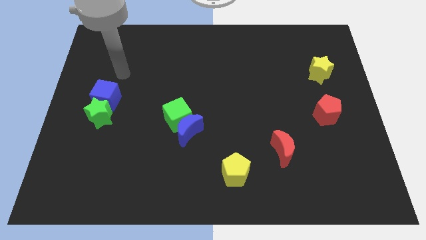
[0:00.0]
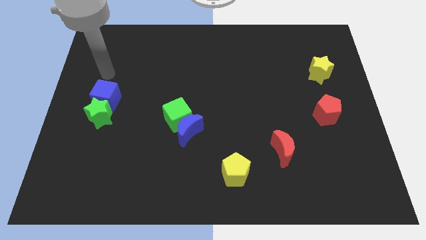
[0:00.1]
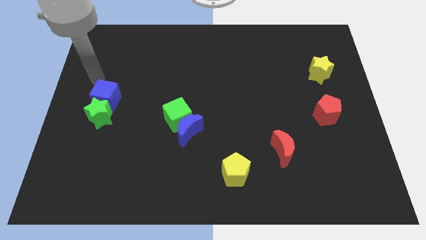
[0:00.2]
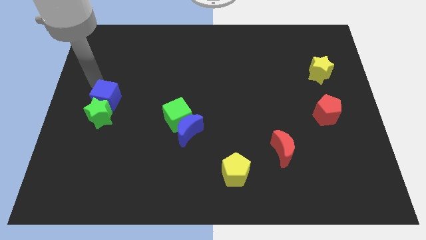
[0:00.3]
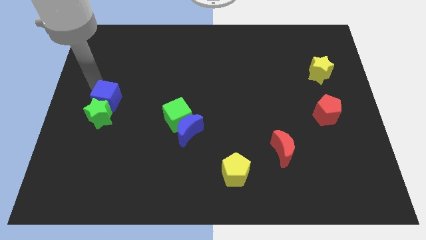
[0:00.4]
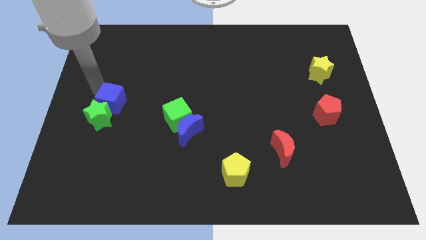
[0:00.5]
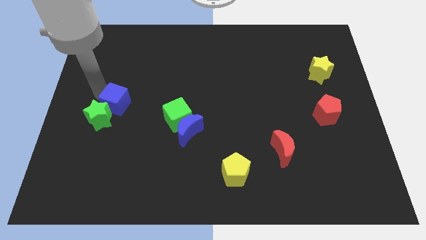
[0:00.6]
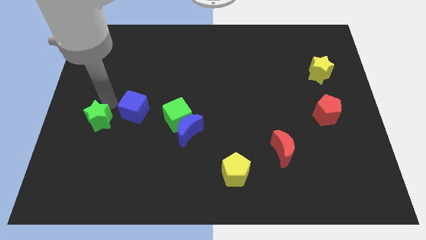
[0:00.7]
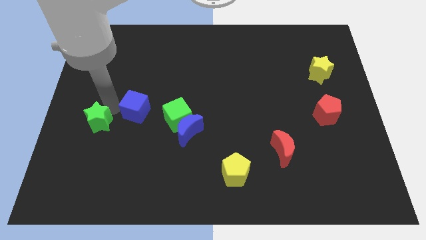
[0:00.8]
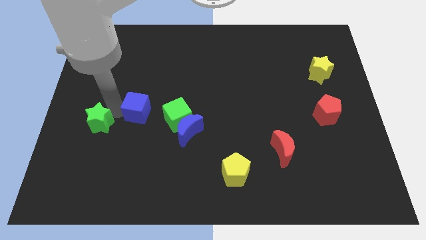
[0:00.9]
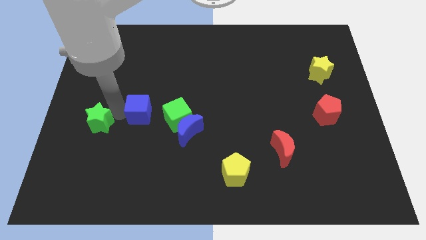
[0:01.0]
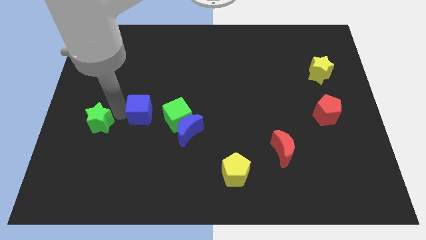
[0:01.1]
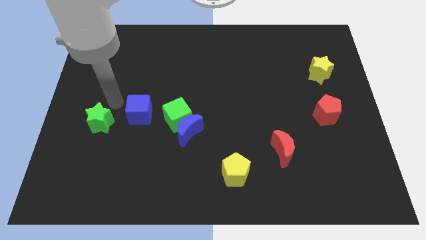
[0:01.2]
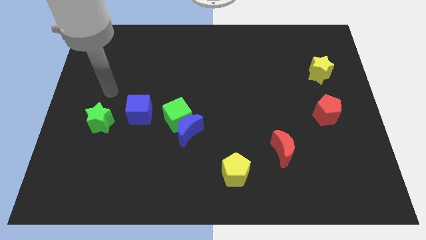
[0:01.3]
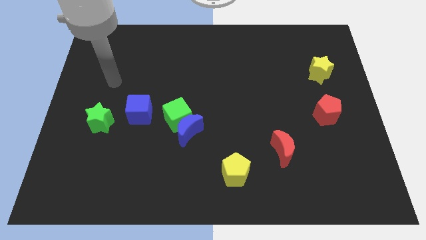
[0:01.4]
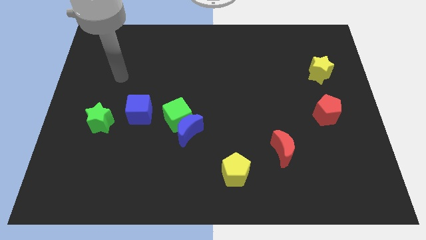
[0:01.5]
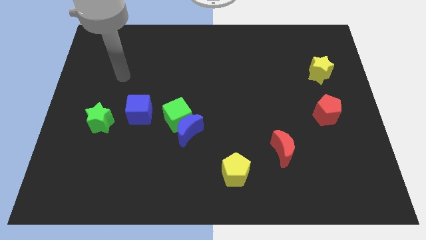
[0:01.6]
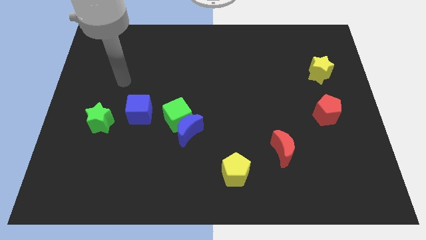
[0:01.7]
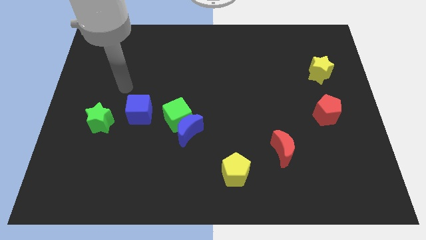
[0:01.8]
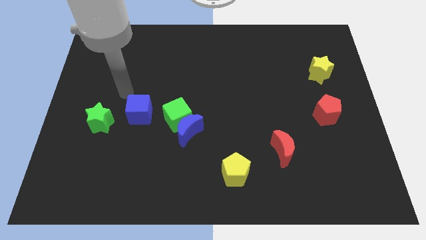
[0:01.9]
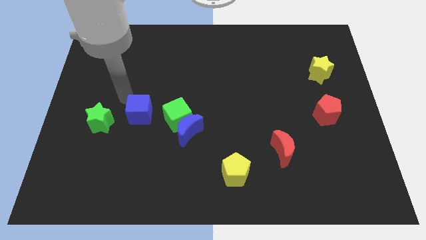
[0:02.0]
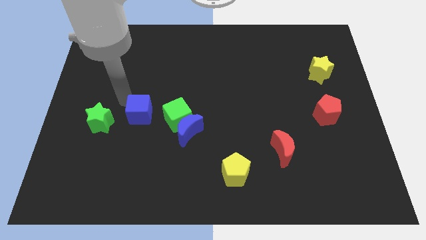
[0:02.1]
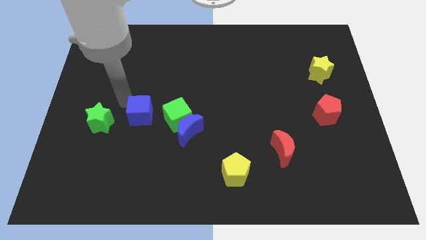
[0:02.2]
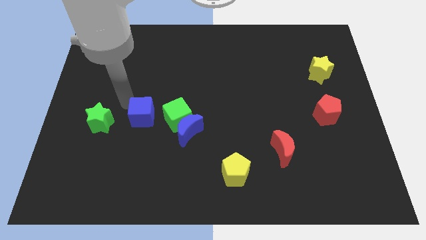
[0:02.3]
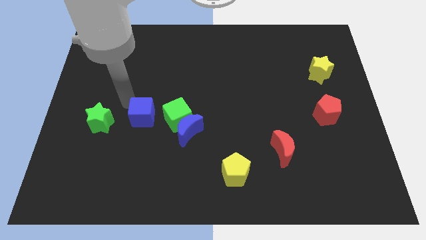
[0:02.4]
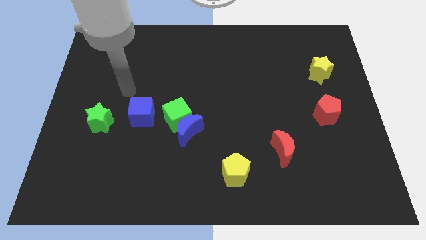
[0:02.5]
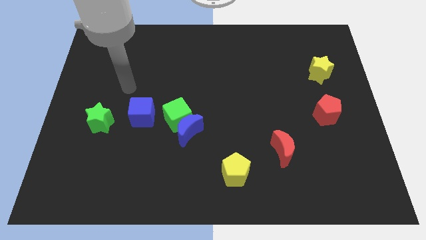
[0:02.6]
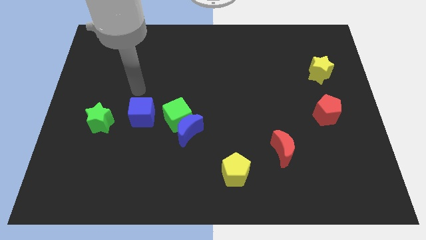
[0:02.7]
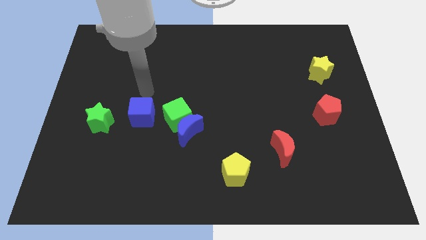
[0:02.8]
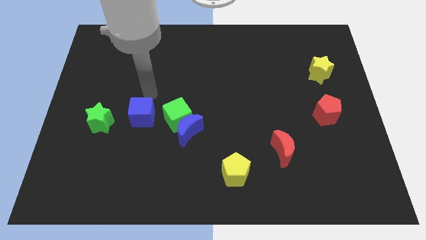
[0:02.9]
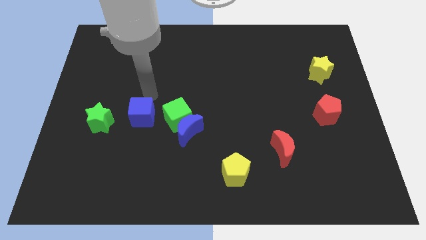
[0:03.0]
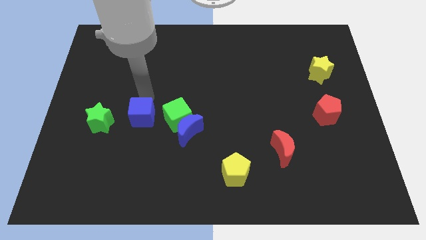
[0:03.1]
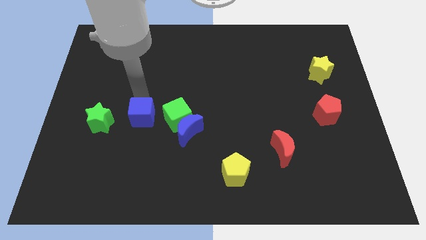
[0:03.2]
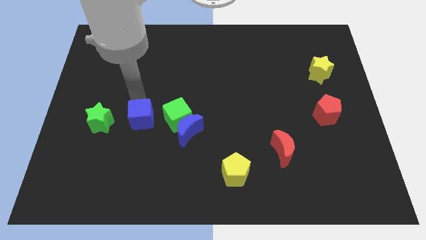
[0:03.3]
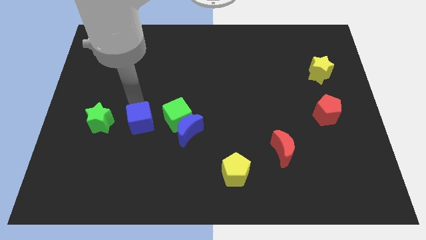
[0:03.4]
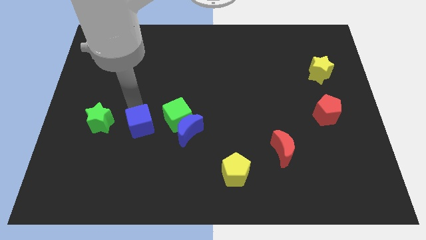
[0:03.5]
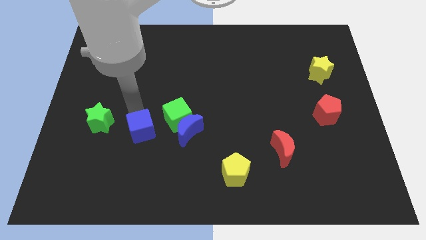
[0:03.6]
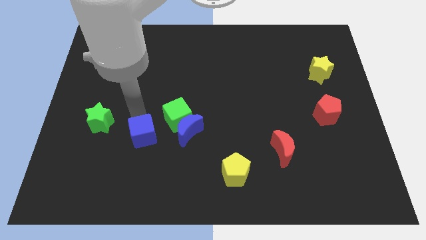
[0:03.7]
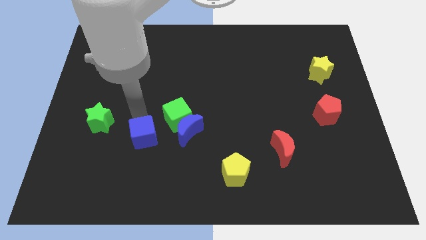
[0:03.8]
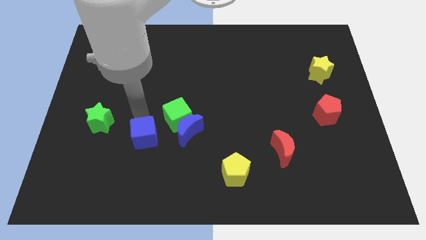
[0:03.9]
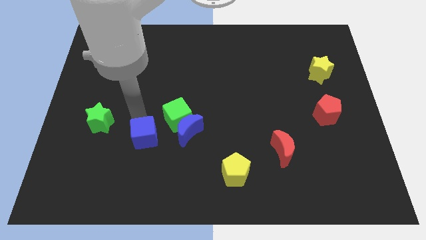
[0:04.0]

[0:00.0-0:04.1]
slide blue cube to the left of blue moon

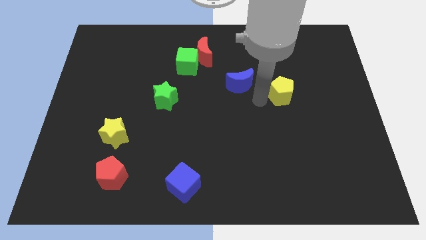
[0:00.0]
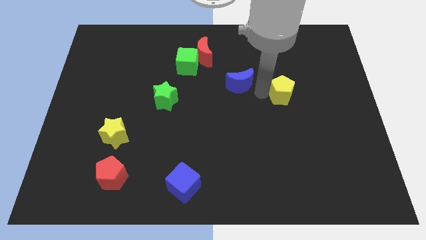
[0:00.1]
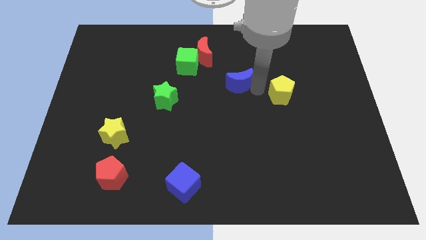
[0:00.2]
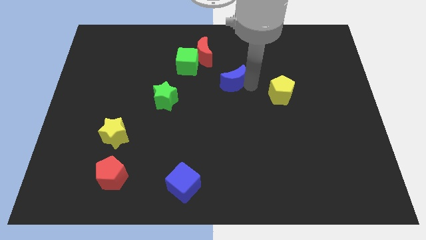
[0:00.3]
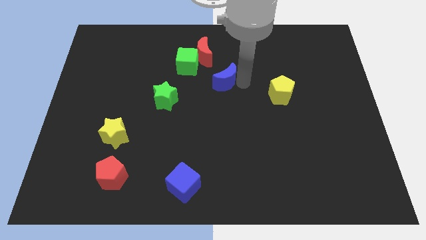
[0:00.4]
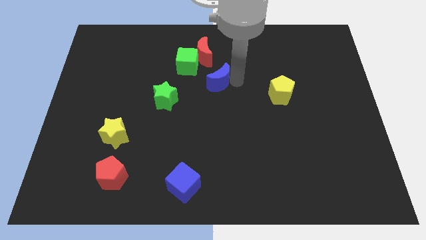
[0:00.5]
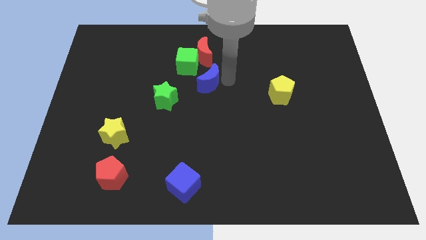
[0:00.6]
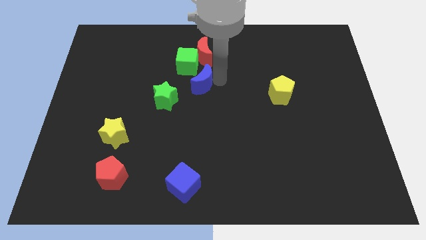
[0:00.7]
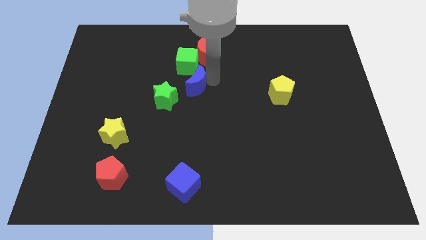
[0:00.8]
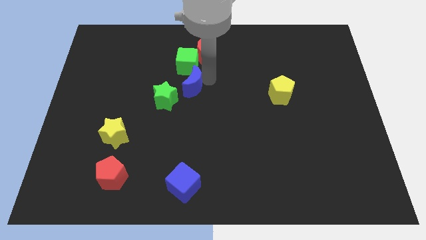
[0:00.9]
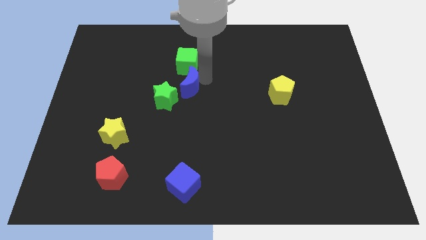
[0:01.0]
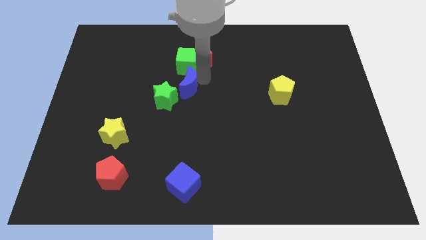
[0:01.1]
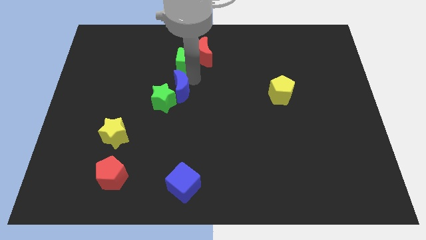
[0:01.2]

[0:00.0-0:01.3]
move the blue moon below the green cube

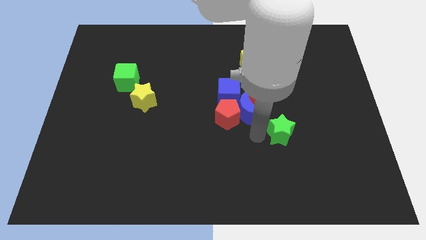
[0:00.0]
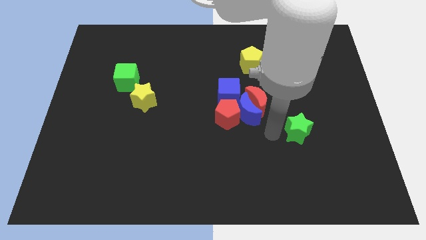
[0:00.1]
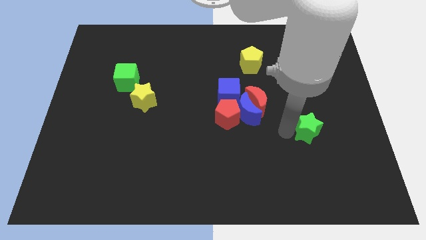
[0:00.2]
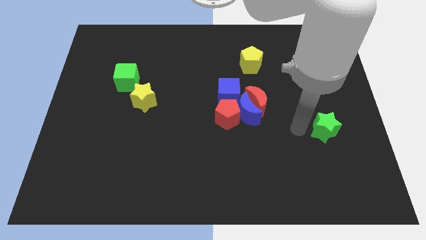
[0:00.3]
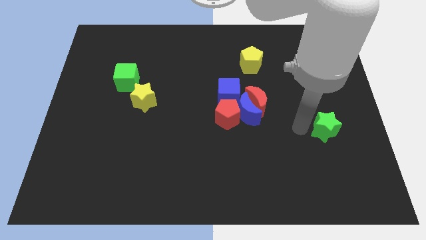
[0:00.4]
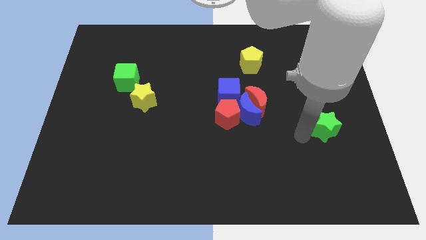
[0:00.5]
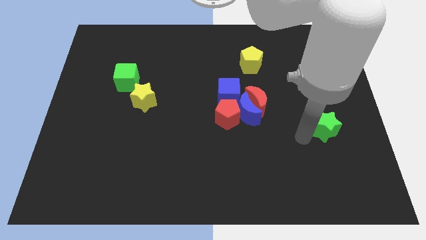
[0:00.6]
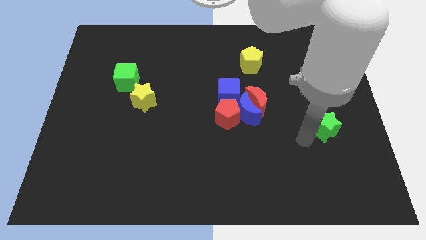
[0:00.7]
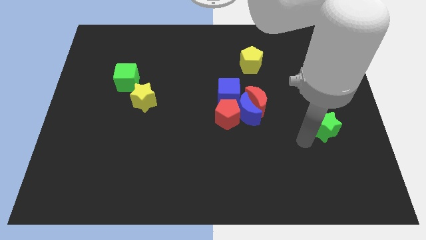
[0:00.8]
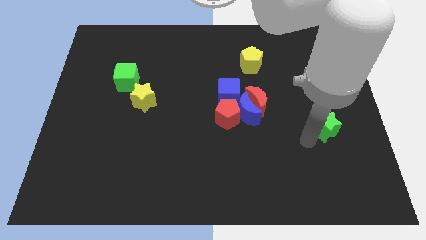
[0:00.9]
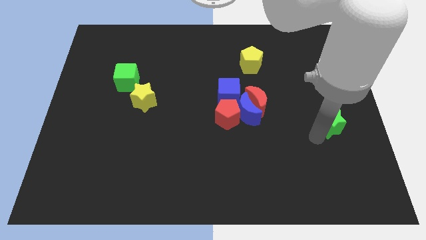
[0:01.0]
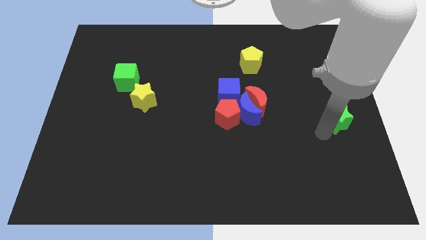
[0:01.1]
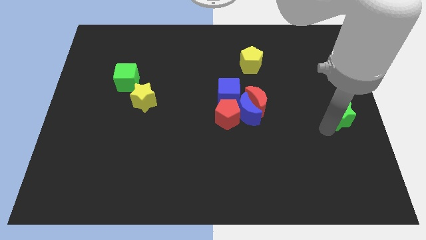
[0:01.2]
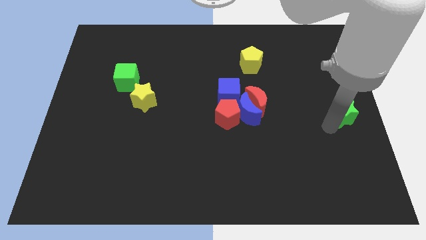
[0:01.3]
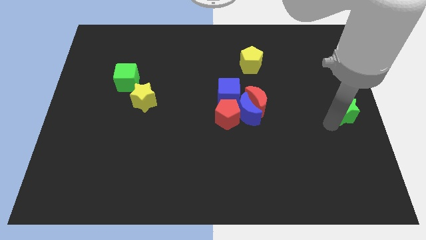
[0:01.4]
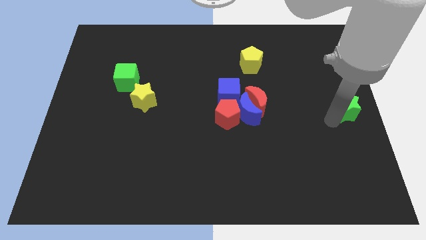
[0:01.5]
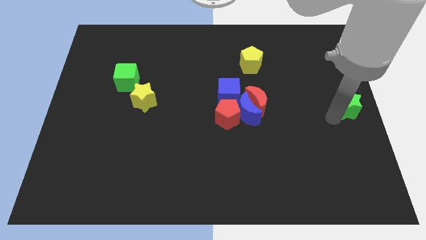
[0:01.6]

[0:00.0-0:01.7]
move the green star to the right center of the board

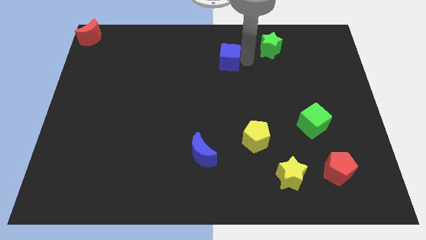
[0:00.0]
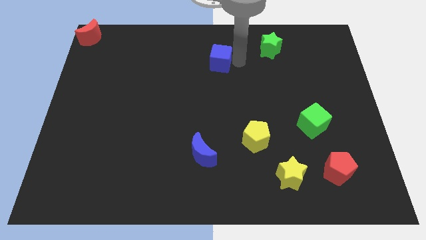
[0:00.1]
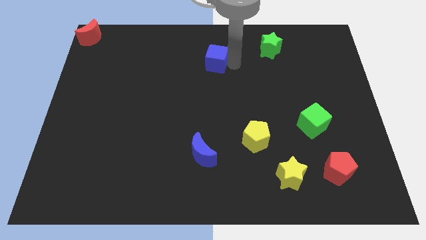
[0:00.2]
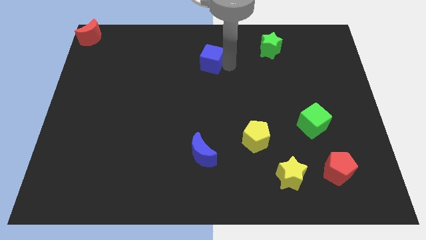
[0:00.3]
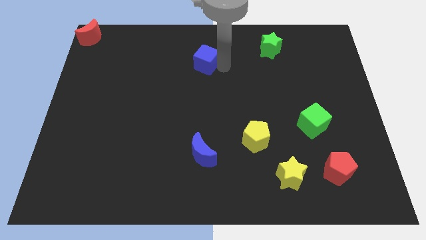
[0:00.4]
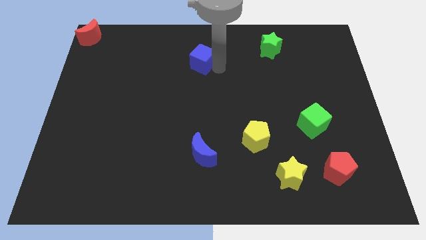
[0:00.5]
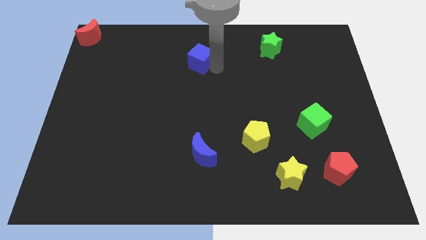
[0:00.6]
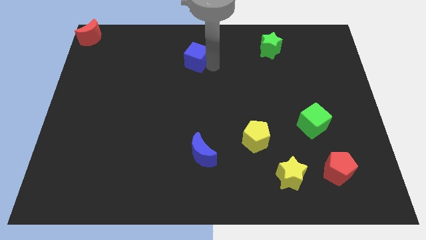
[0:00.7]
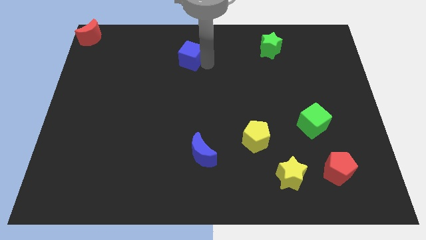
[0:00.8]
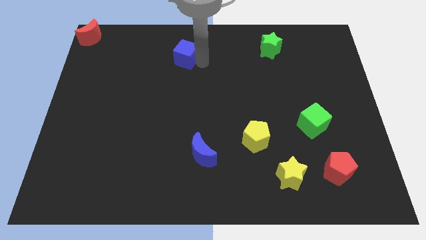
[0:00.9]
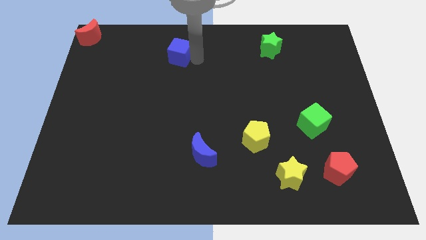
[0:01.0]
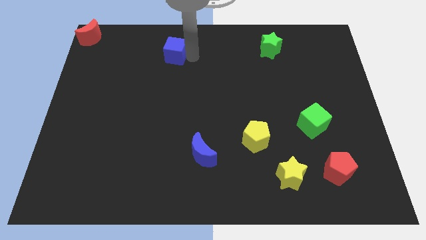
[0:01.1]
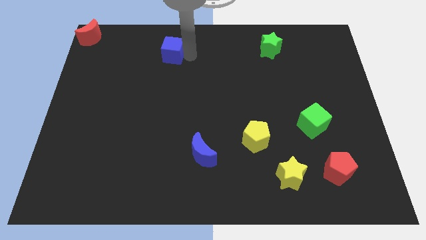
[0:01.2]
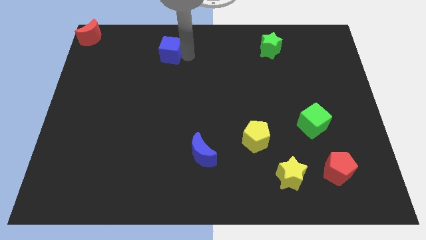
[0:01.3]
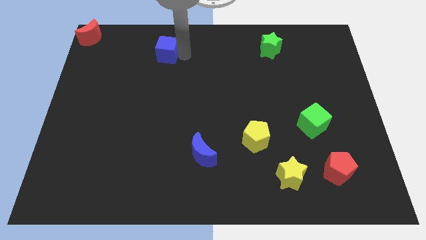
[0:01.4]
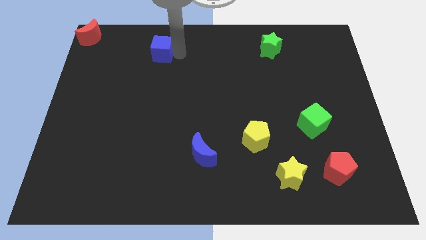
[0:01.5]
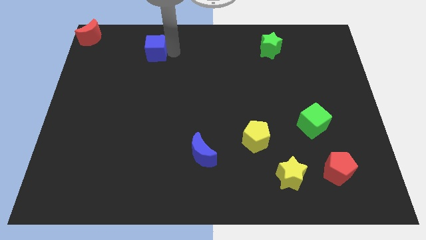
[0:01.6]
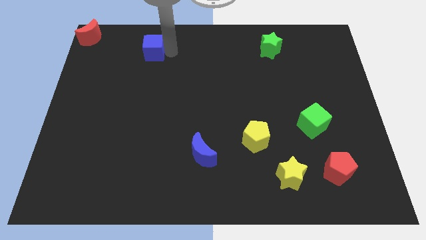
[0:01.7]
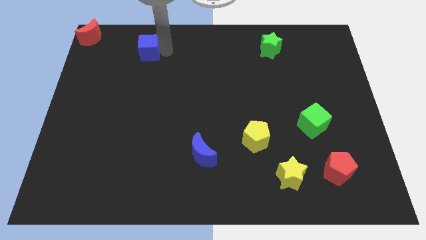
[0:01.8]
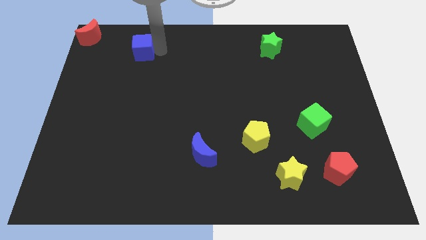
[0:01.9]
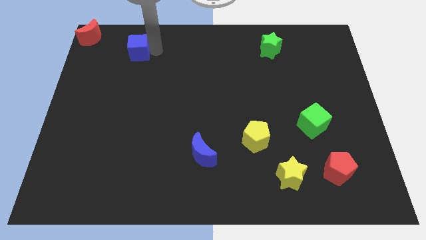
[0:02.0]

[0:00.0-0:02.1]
push blue cube towards the red crescent
